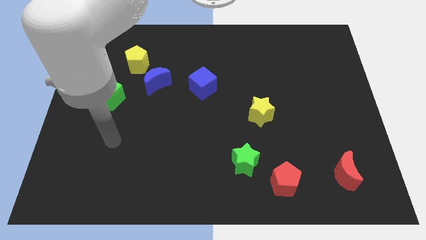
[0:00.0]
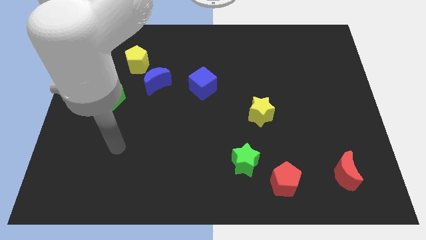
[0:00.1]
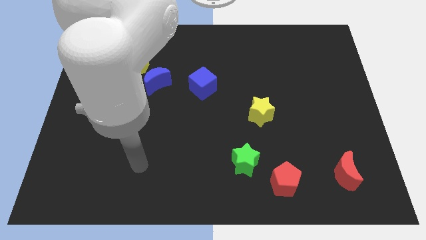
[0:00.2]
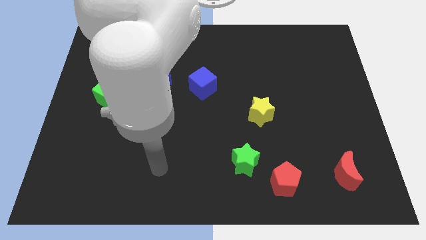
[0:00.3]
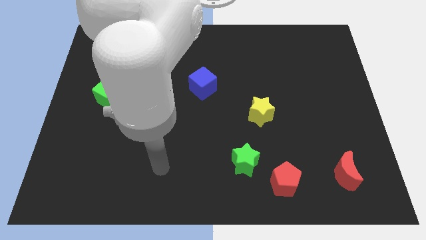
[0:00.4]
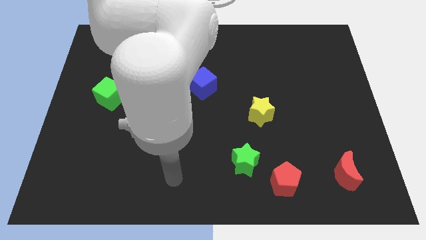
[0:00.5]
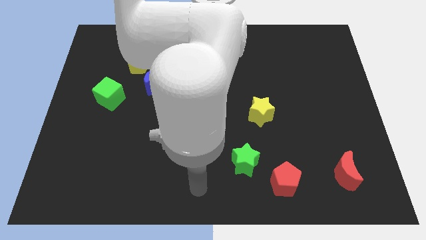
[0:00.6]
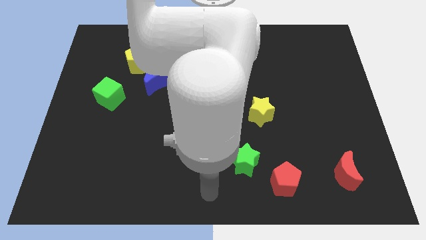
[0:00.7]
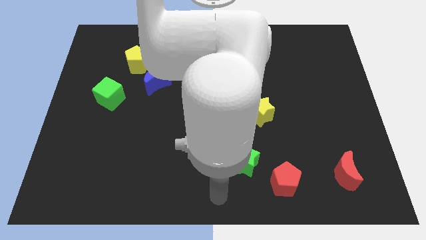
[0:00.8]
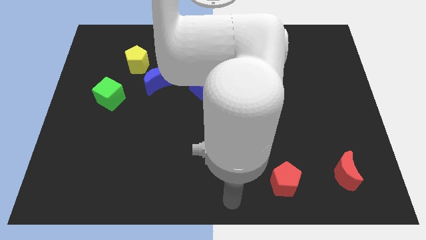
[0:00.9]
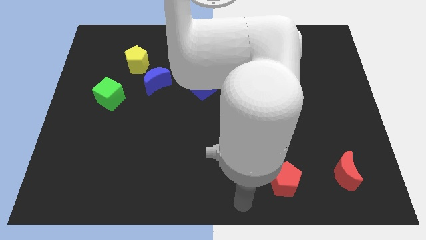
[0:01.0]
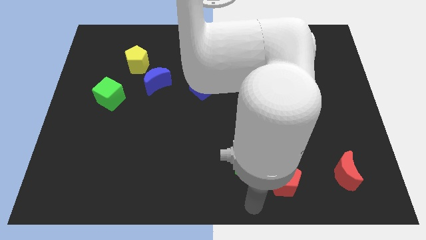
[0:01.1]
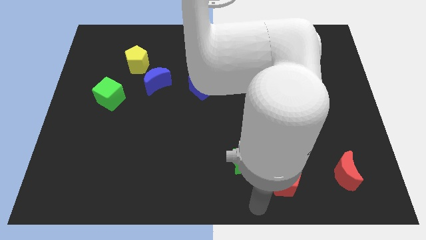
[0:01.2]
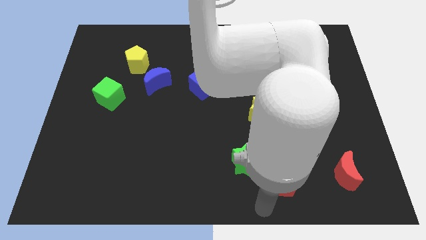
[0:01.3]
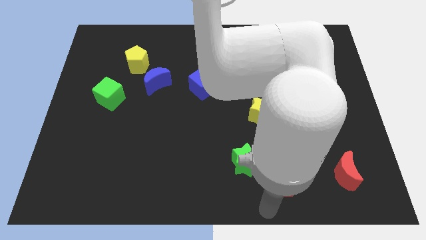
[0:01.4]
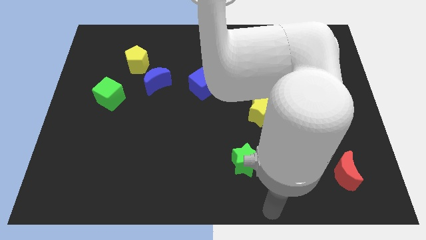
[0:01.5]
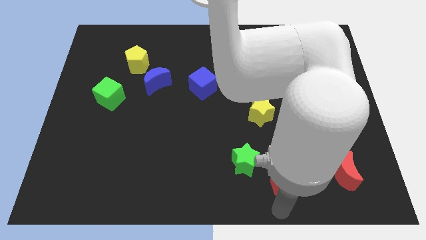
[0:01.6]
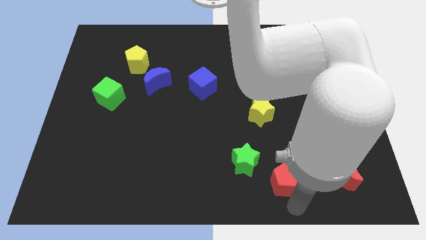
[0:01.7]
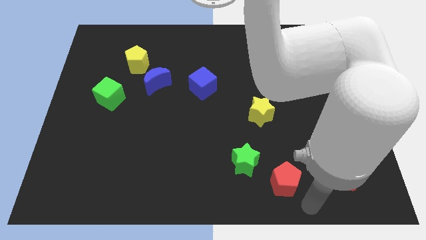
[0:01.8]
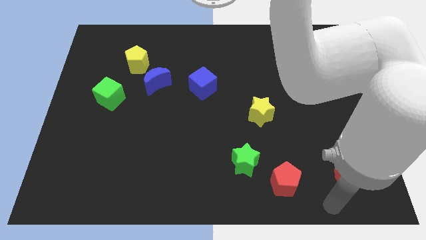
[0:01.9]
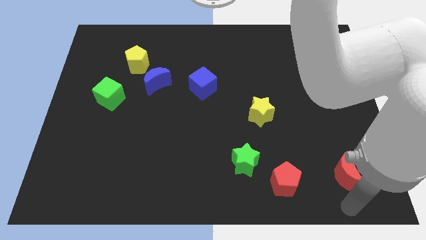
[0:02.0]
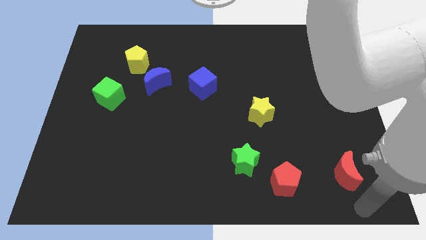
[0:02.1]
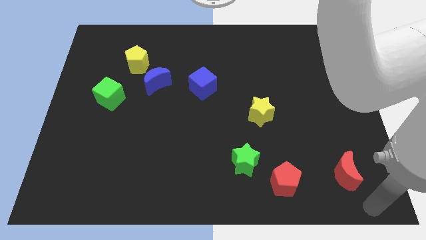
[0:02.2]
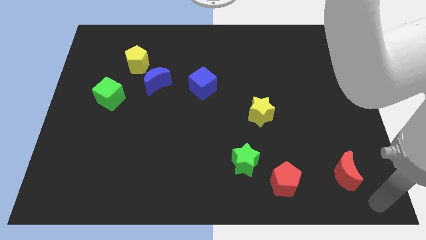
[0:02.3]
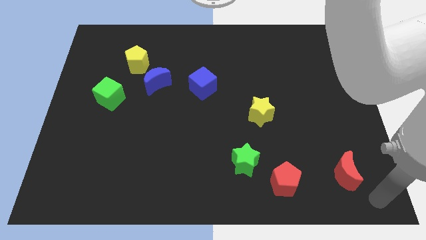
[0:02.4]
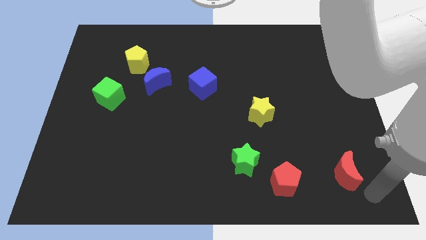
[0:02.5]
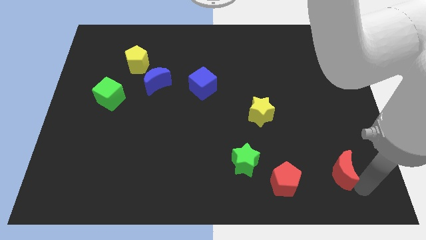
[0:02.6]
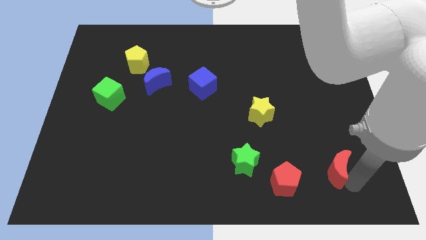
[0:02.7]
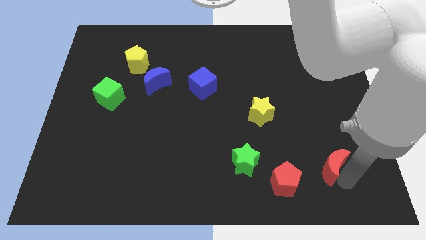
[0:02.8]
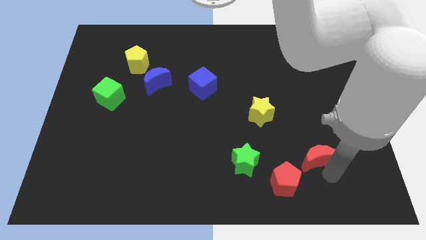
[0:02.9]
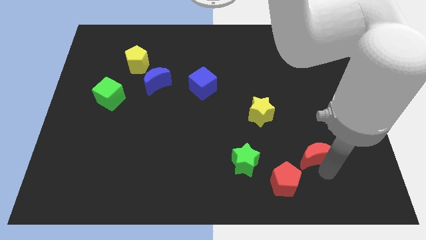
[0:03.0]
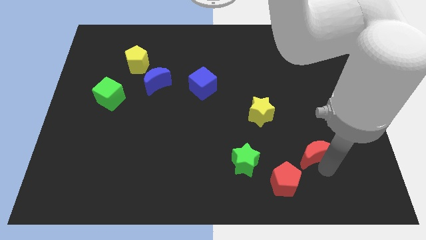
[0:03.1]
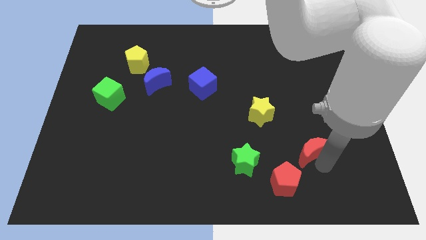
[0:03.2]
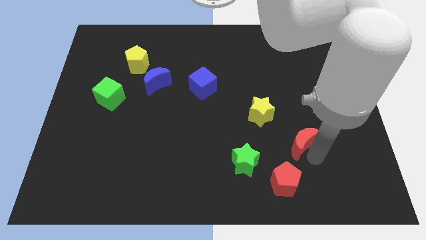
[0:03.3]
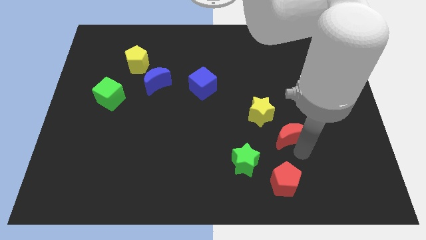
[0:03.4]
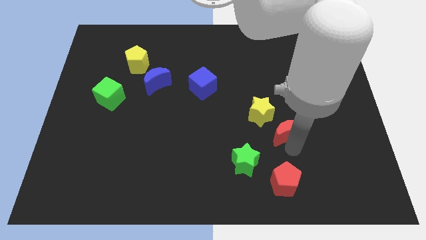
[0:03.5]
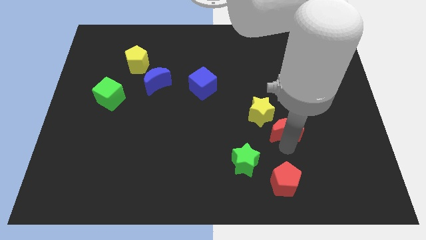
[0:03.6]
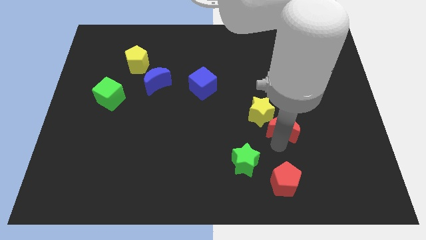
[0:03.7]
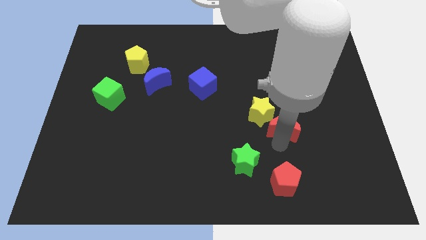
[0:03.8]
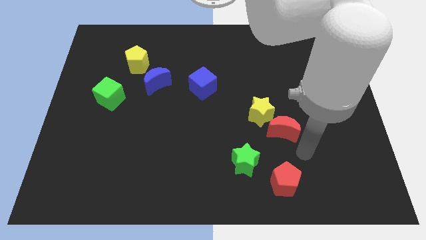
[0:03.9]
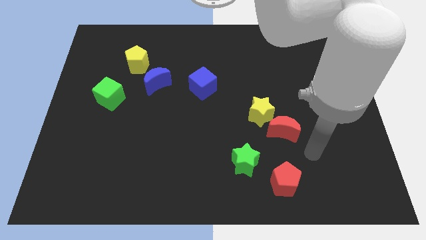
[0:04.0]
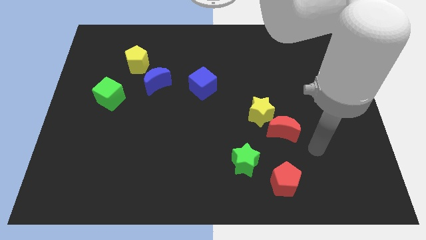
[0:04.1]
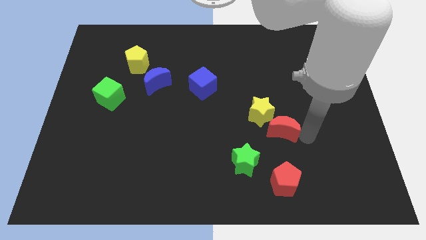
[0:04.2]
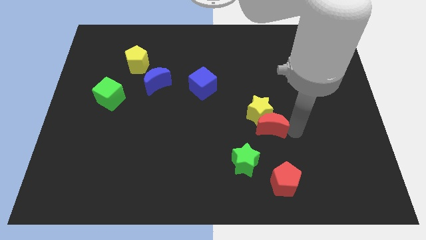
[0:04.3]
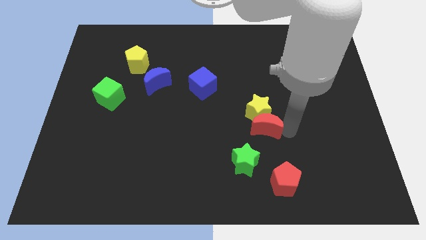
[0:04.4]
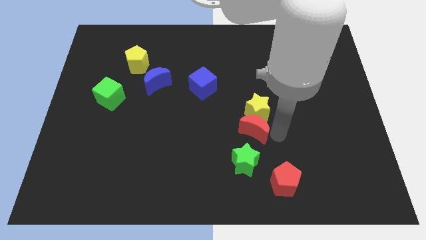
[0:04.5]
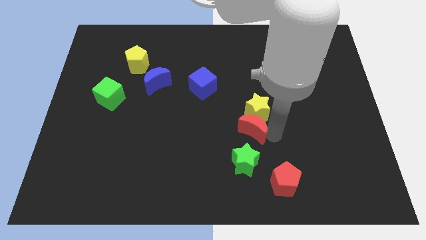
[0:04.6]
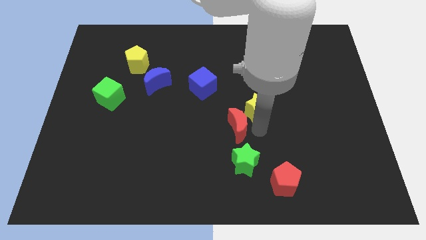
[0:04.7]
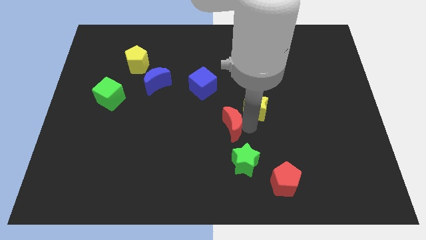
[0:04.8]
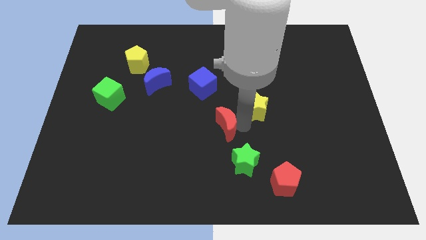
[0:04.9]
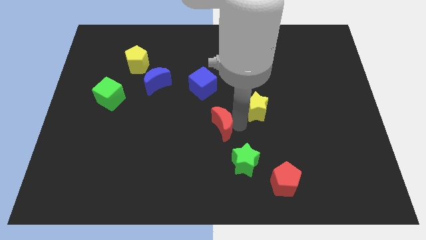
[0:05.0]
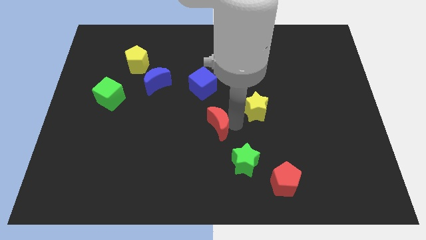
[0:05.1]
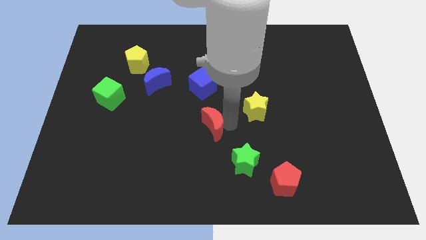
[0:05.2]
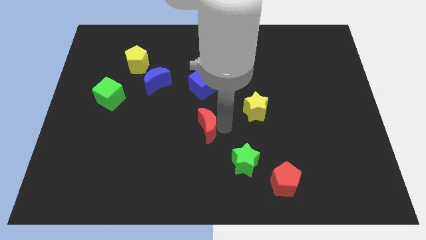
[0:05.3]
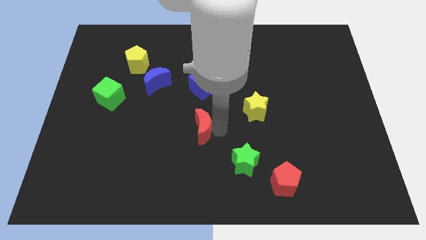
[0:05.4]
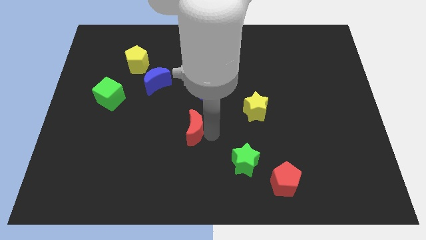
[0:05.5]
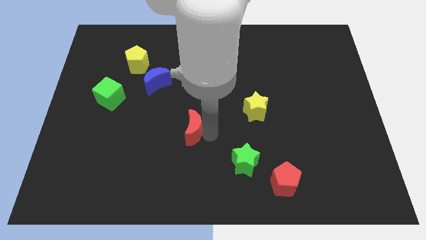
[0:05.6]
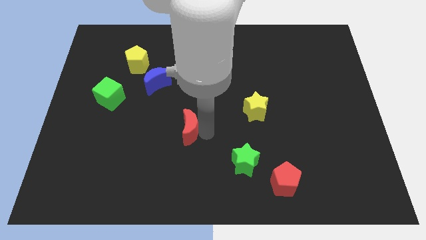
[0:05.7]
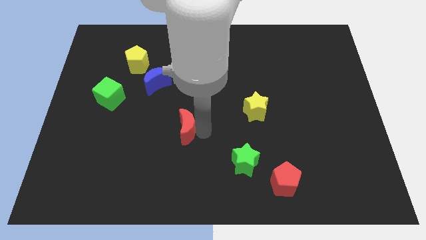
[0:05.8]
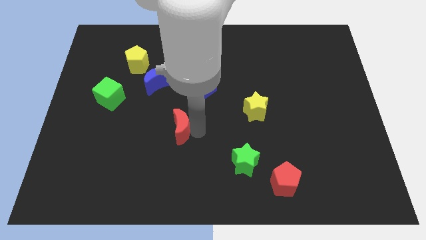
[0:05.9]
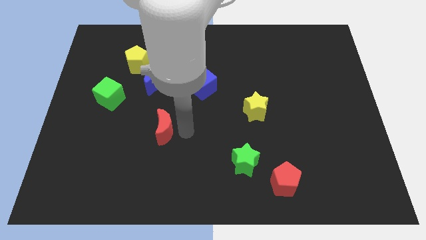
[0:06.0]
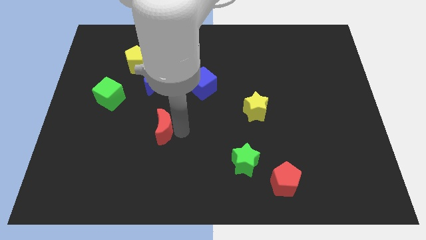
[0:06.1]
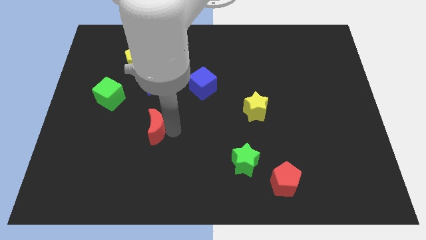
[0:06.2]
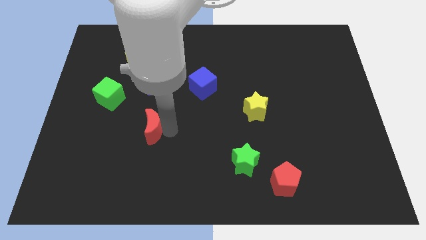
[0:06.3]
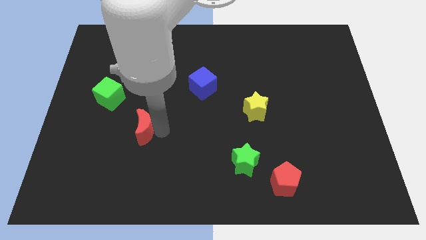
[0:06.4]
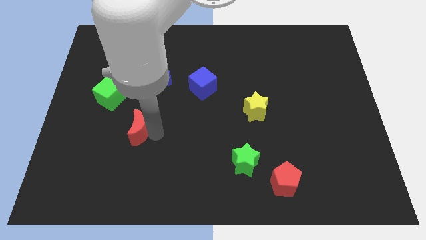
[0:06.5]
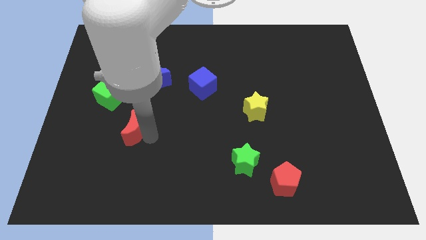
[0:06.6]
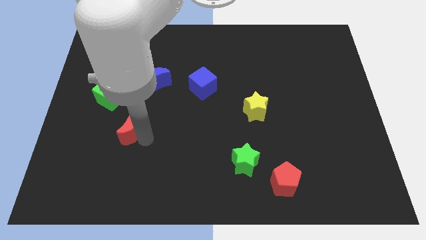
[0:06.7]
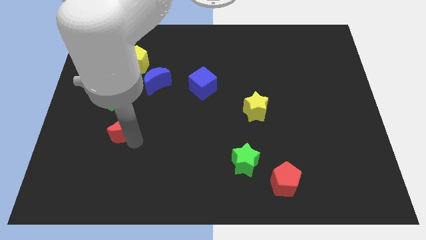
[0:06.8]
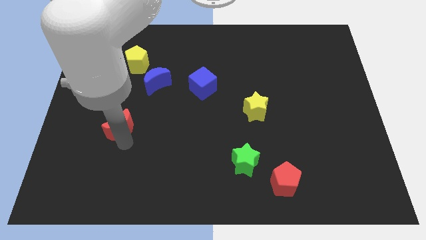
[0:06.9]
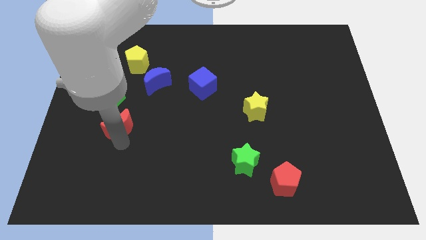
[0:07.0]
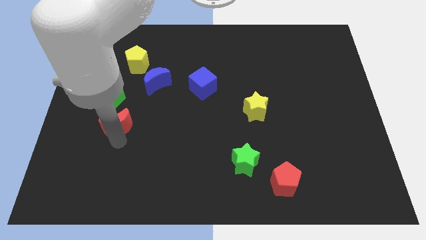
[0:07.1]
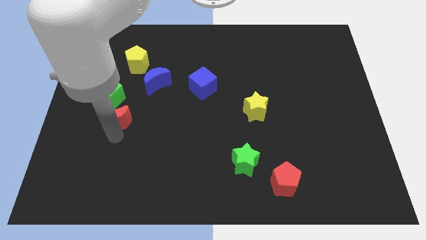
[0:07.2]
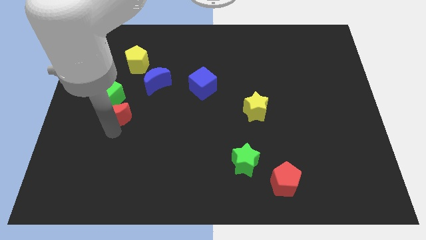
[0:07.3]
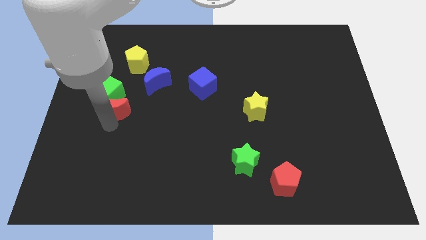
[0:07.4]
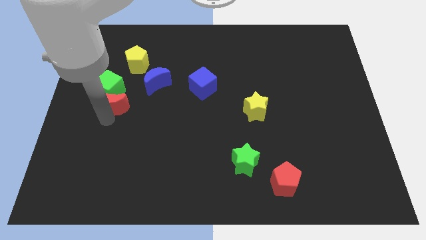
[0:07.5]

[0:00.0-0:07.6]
put the red moon towards the green cube

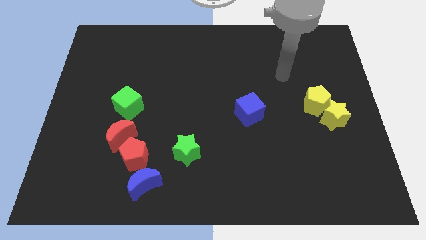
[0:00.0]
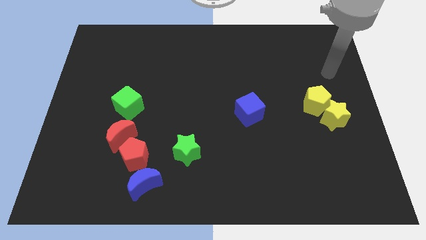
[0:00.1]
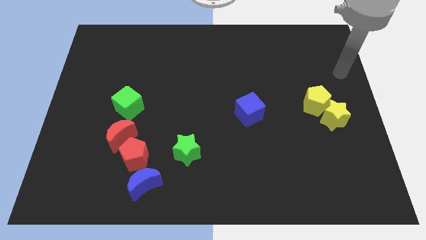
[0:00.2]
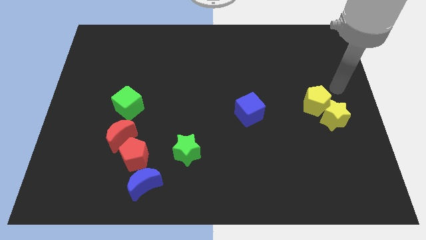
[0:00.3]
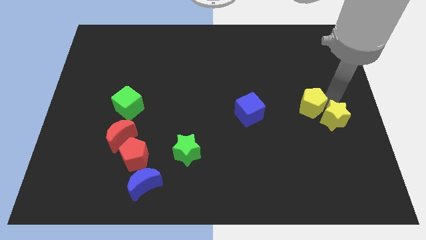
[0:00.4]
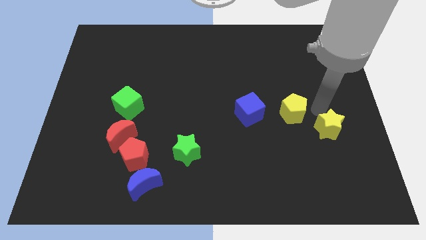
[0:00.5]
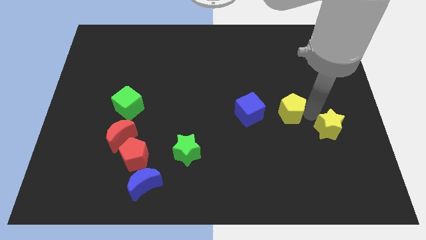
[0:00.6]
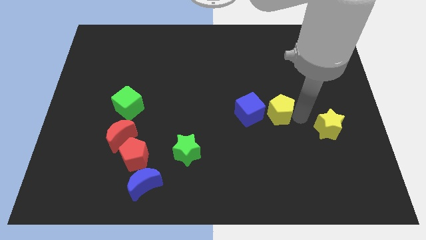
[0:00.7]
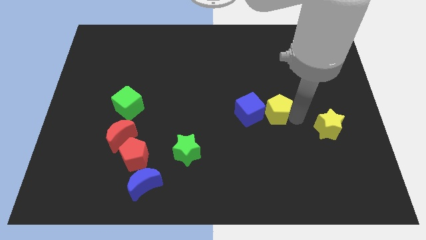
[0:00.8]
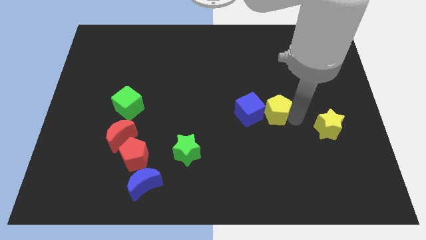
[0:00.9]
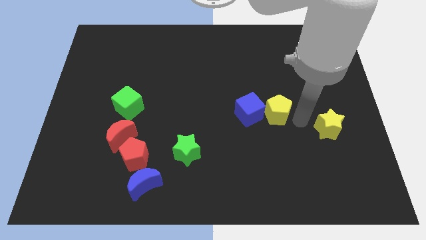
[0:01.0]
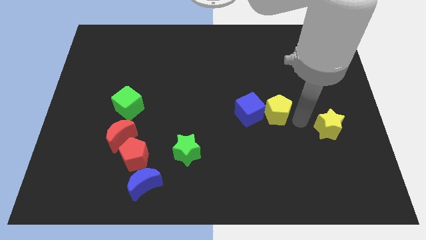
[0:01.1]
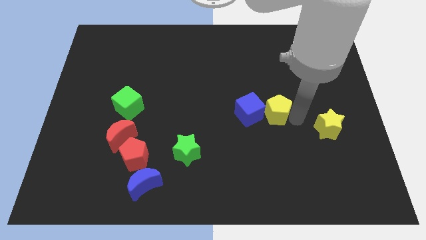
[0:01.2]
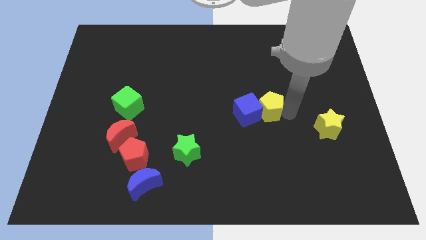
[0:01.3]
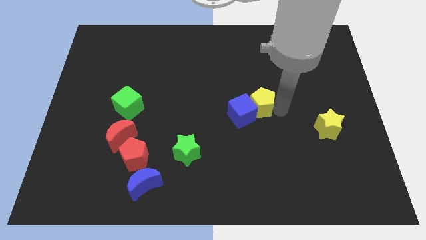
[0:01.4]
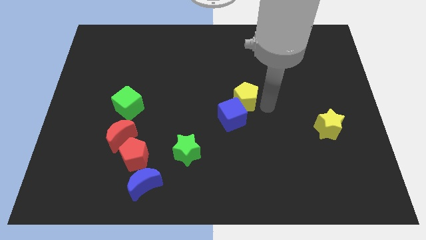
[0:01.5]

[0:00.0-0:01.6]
put the yellow pentagon to the blue cube
